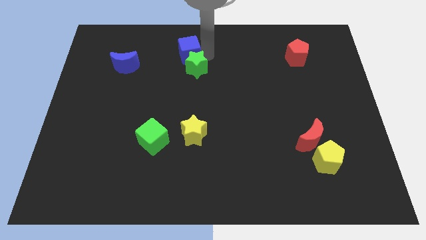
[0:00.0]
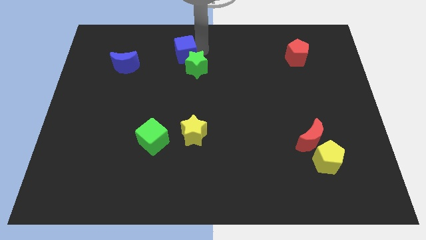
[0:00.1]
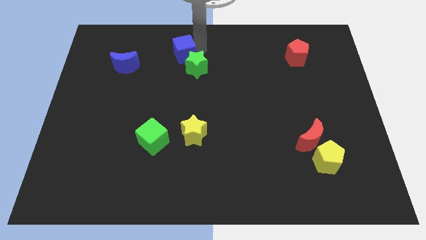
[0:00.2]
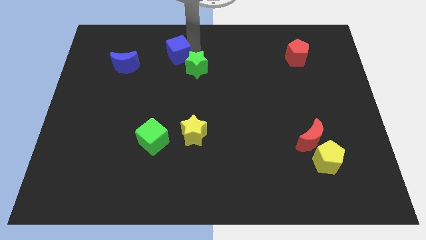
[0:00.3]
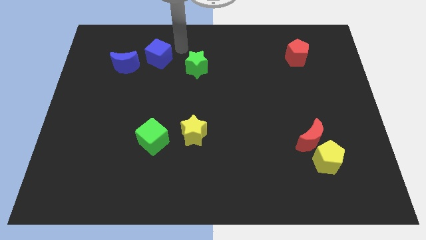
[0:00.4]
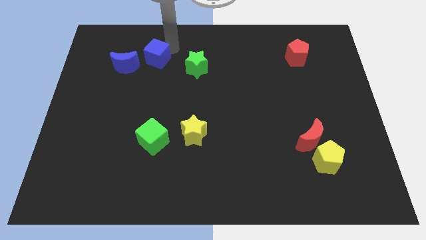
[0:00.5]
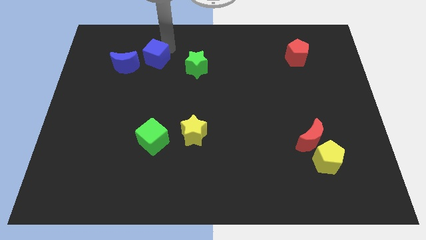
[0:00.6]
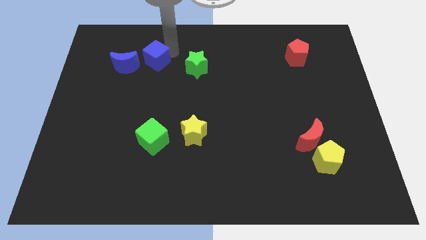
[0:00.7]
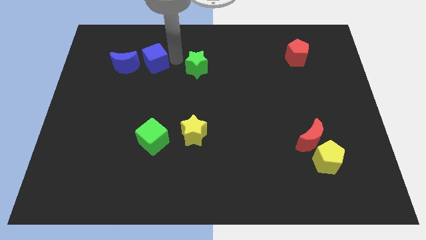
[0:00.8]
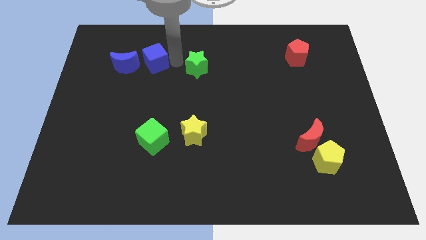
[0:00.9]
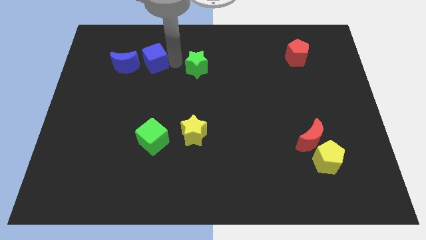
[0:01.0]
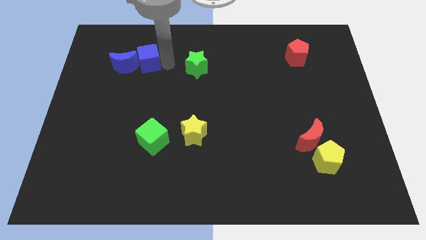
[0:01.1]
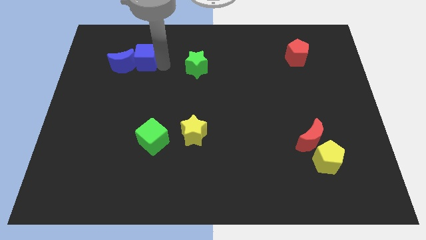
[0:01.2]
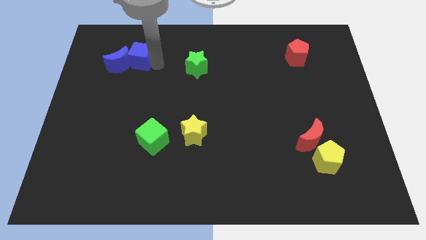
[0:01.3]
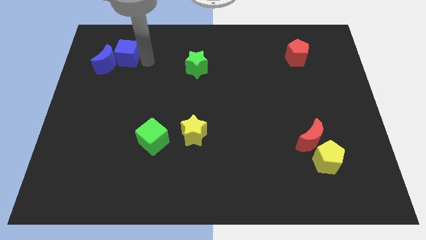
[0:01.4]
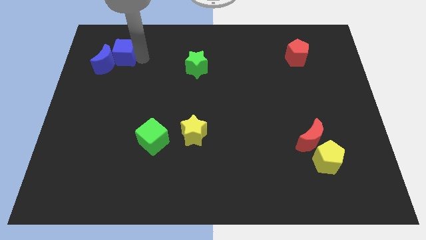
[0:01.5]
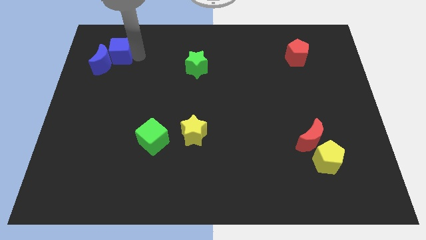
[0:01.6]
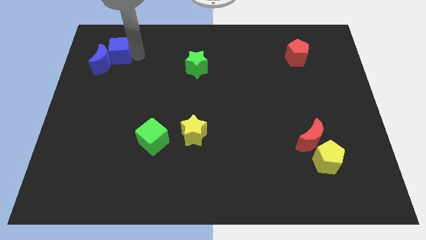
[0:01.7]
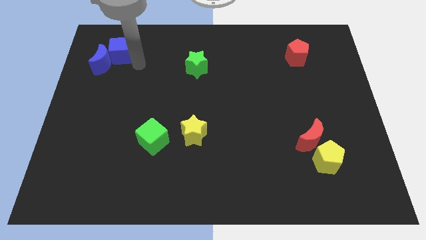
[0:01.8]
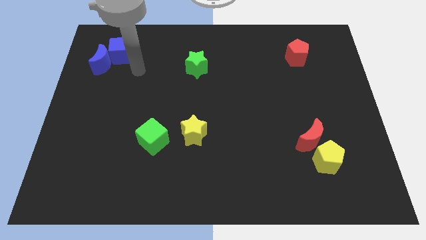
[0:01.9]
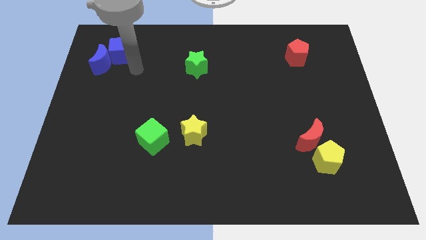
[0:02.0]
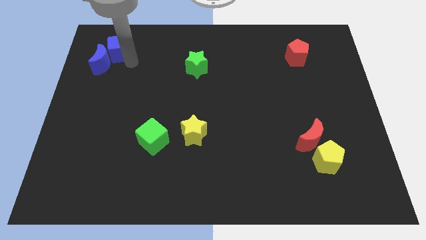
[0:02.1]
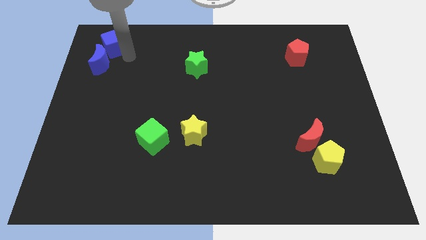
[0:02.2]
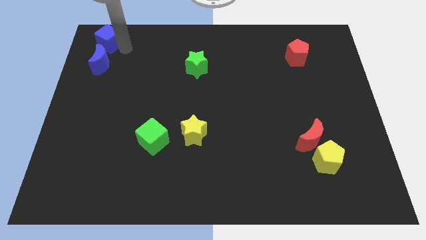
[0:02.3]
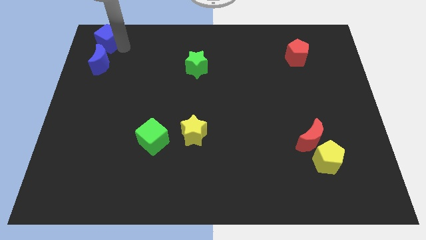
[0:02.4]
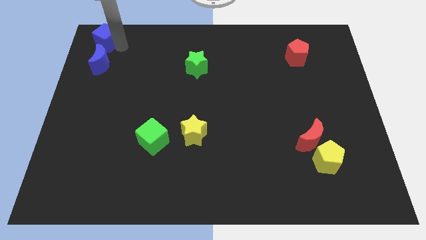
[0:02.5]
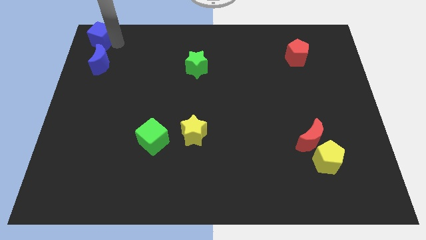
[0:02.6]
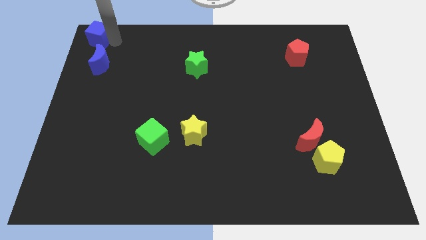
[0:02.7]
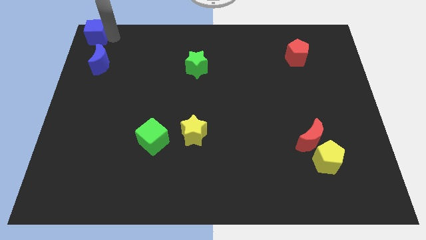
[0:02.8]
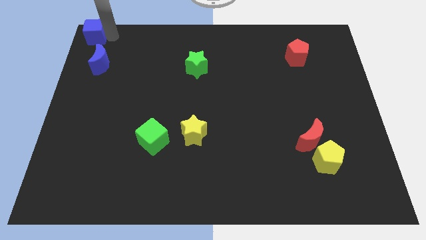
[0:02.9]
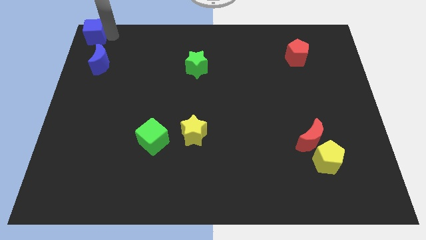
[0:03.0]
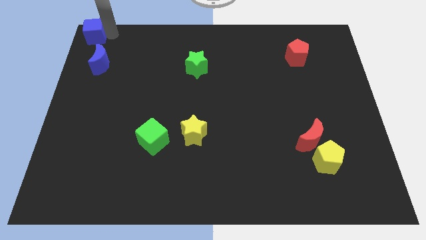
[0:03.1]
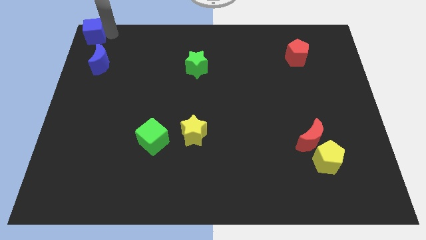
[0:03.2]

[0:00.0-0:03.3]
push the blue cube to the top left corner

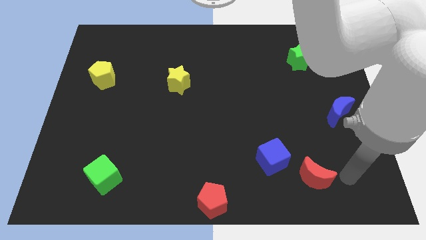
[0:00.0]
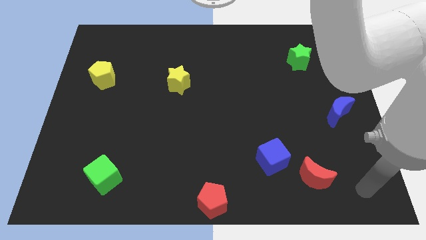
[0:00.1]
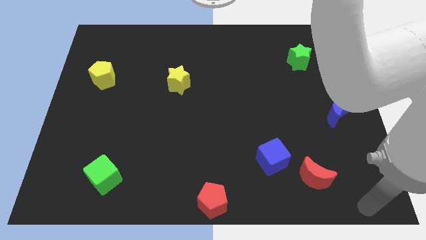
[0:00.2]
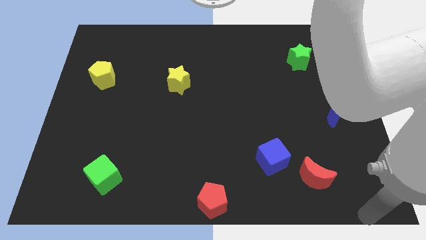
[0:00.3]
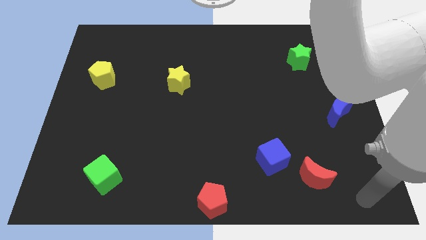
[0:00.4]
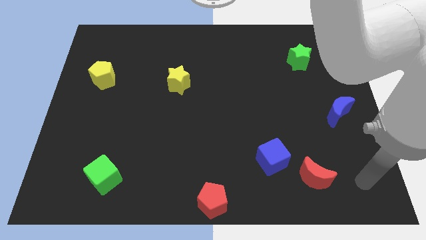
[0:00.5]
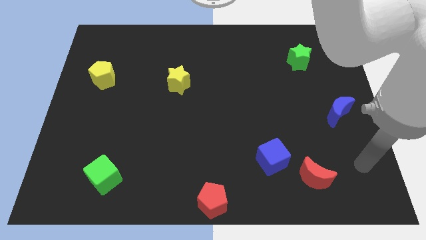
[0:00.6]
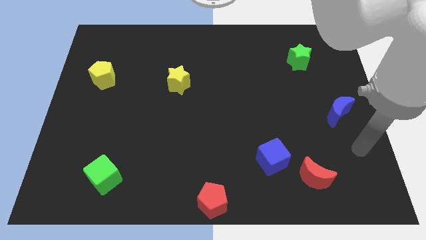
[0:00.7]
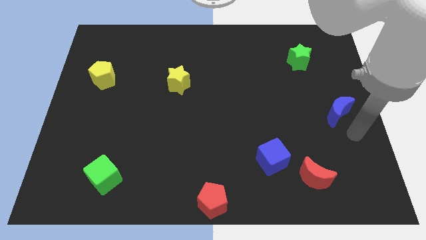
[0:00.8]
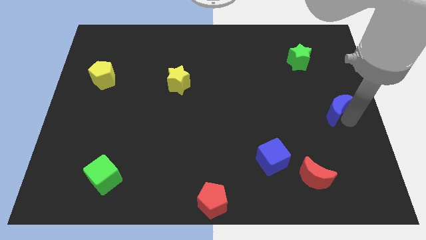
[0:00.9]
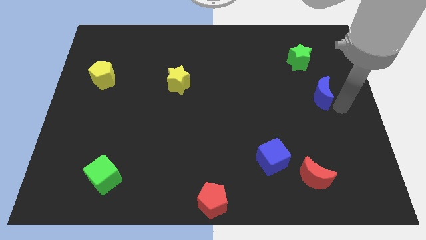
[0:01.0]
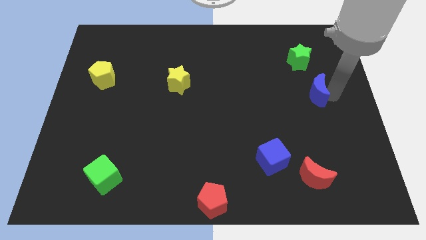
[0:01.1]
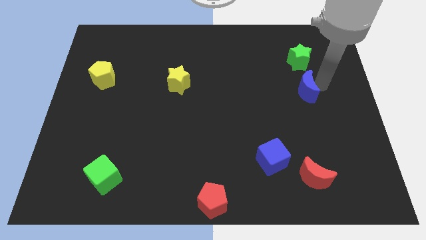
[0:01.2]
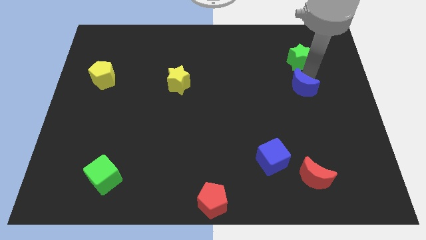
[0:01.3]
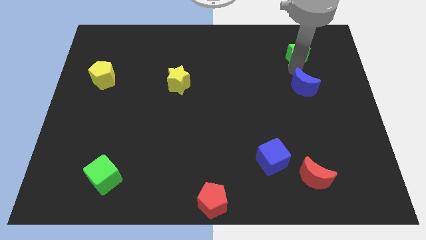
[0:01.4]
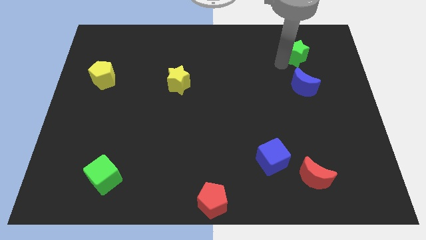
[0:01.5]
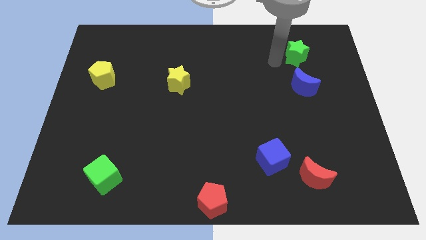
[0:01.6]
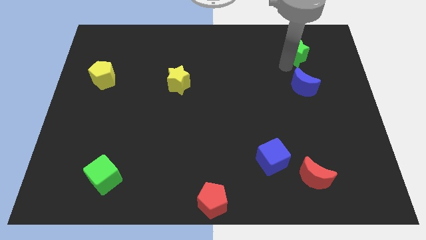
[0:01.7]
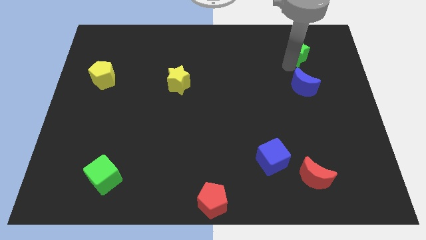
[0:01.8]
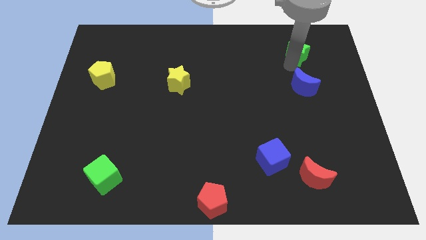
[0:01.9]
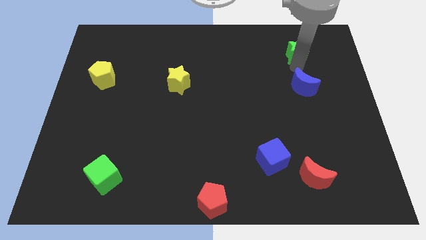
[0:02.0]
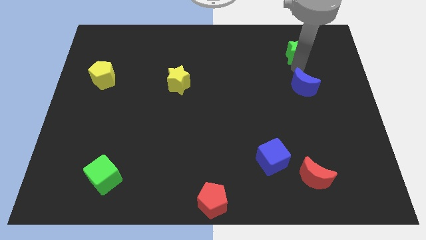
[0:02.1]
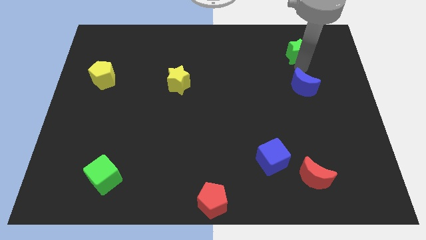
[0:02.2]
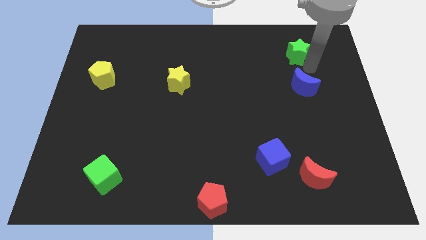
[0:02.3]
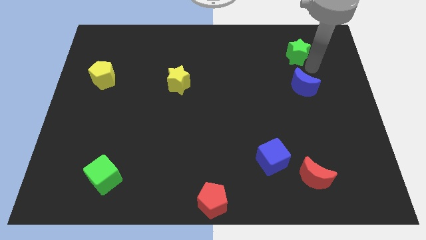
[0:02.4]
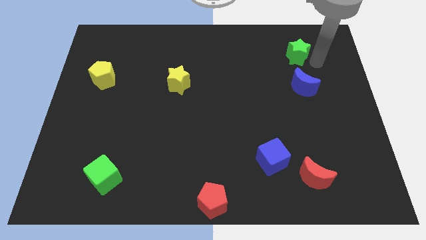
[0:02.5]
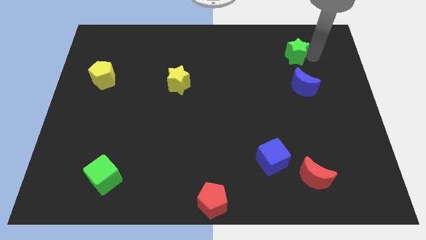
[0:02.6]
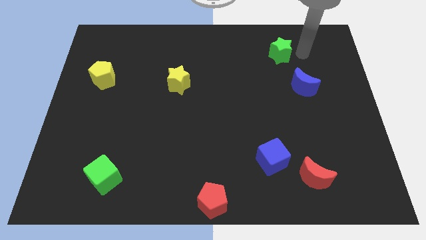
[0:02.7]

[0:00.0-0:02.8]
push the blue moon at the bottom of the green star

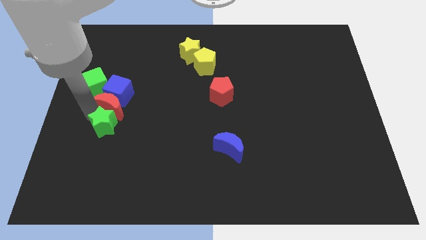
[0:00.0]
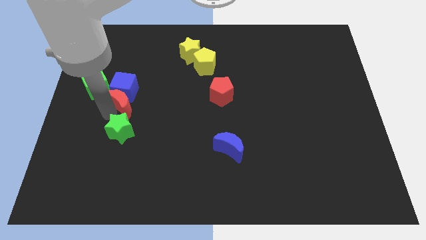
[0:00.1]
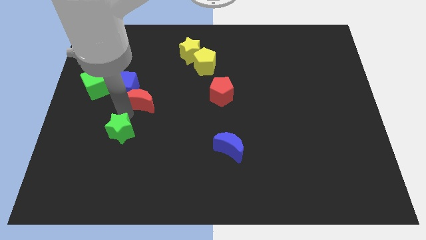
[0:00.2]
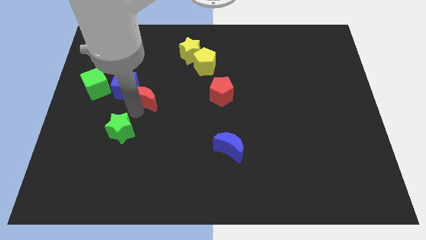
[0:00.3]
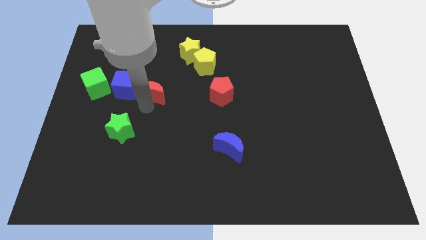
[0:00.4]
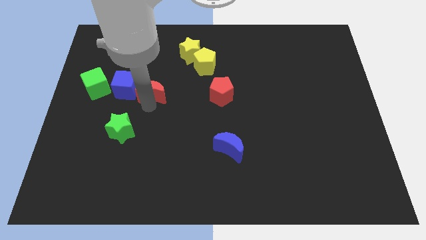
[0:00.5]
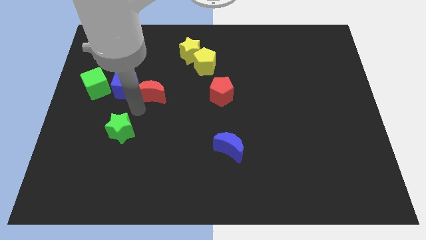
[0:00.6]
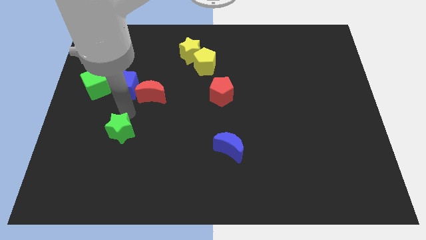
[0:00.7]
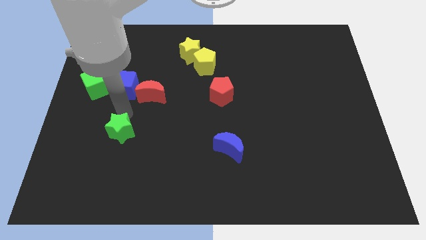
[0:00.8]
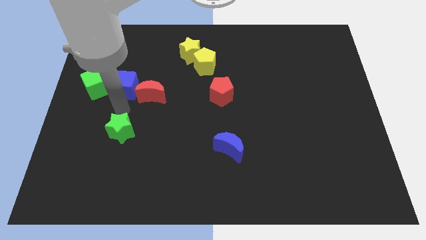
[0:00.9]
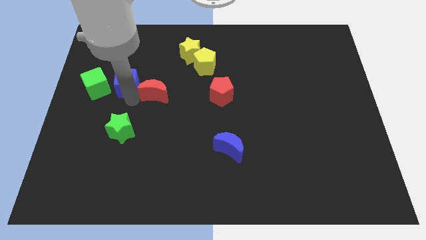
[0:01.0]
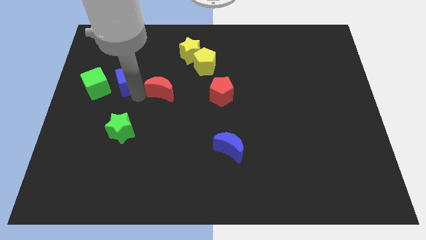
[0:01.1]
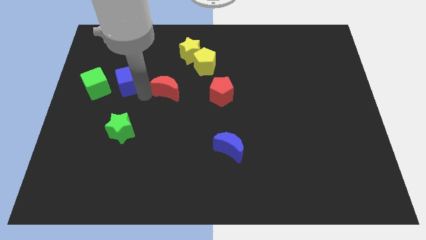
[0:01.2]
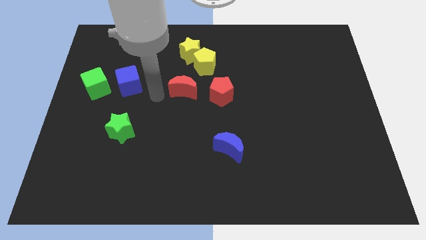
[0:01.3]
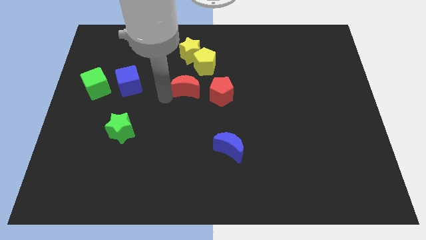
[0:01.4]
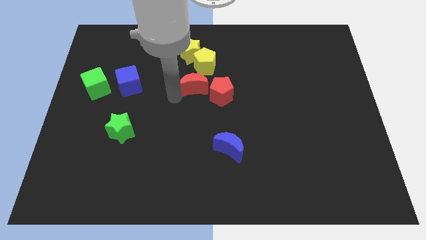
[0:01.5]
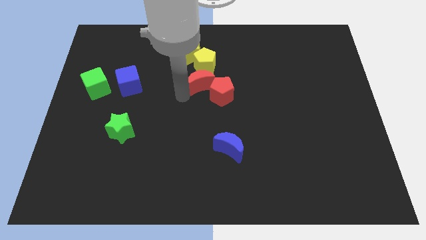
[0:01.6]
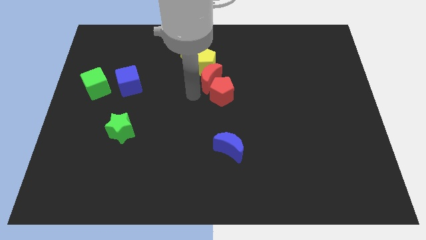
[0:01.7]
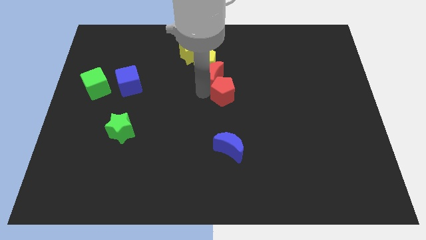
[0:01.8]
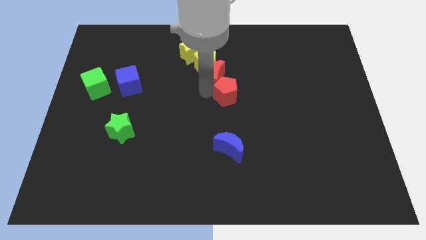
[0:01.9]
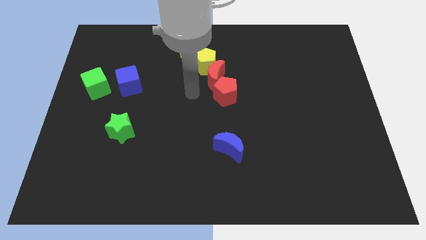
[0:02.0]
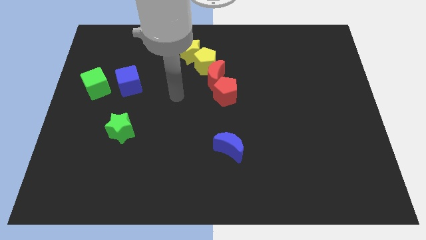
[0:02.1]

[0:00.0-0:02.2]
place red crescent below yellow pentagon

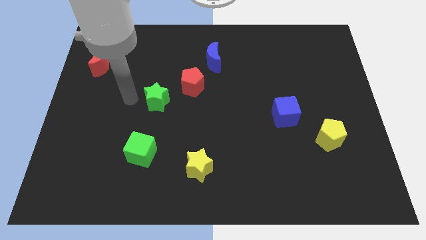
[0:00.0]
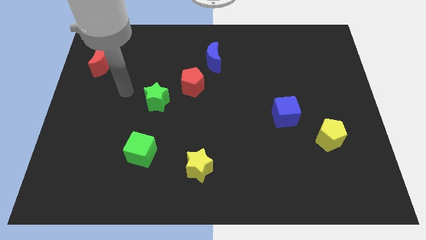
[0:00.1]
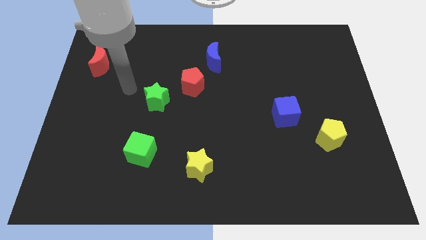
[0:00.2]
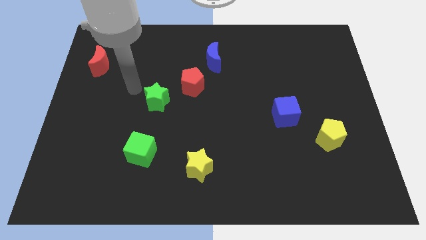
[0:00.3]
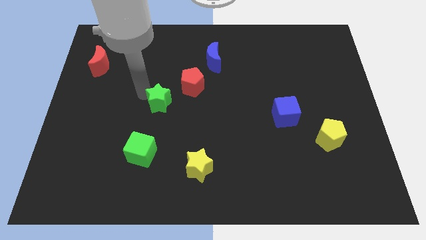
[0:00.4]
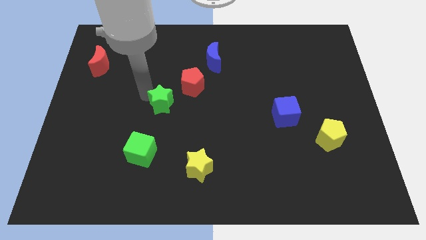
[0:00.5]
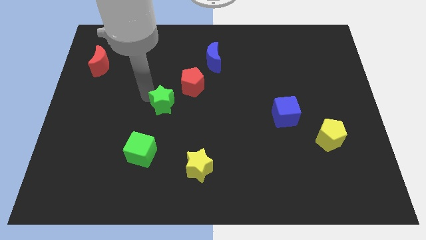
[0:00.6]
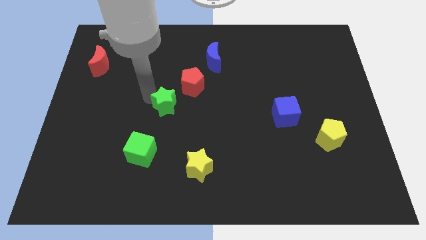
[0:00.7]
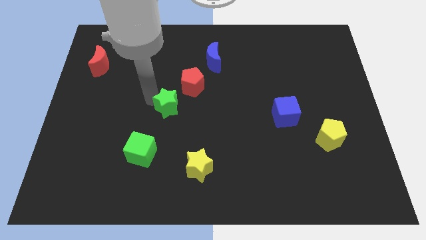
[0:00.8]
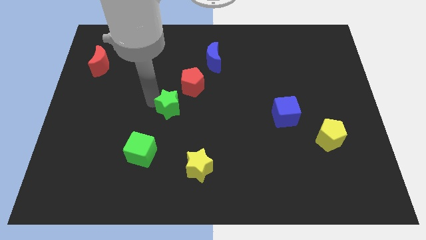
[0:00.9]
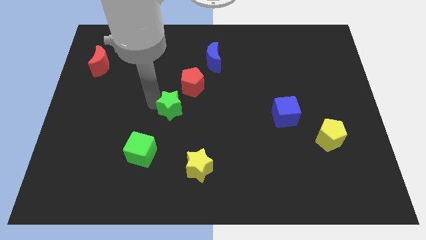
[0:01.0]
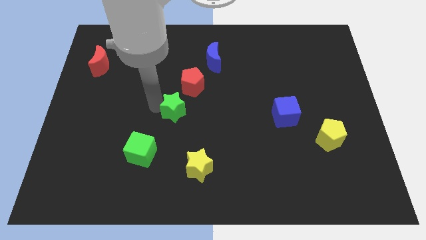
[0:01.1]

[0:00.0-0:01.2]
push the green star towards the center of the board
